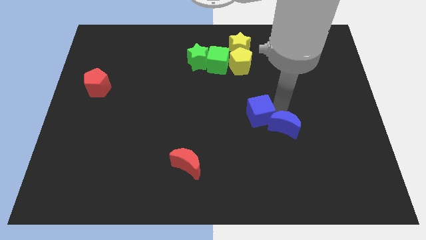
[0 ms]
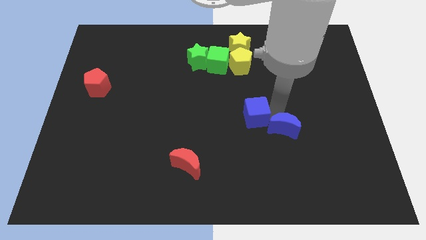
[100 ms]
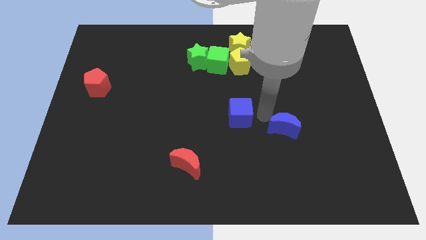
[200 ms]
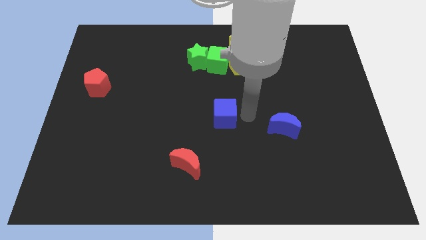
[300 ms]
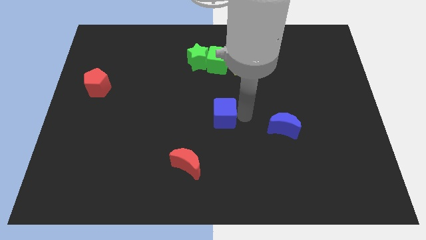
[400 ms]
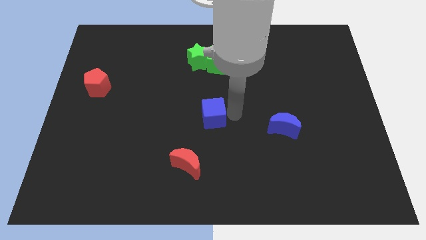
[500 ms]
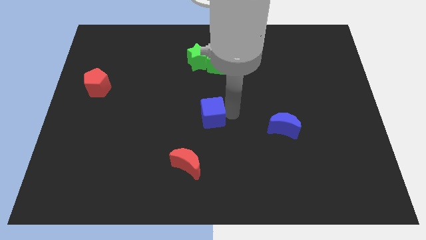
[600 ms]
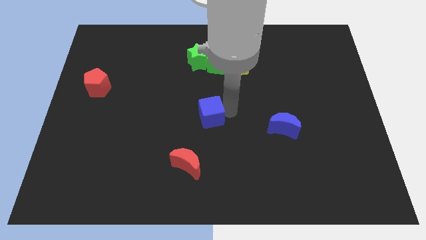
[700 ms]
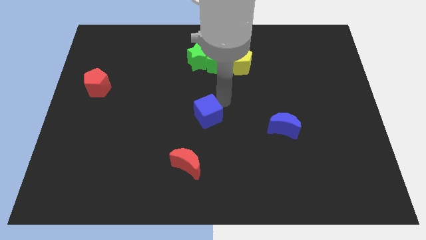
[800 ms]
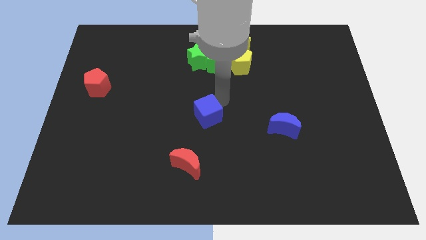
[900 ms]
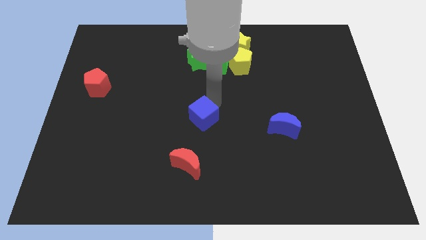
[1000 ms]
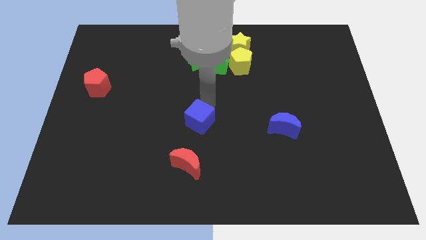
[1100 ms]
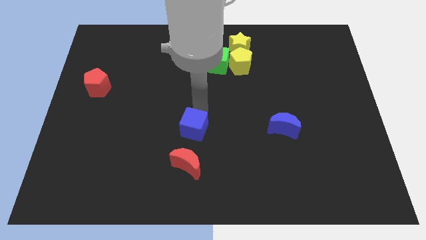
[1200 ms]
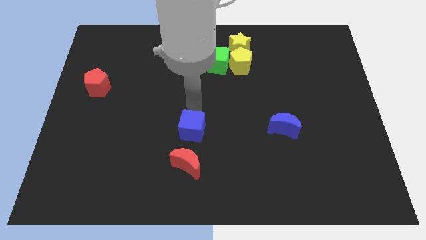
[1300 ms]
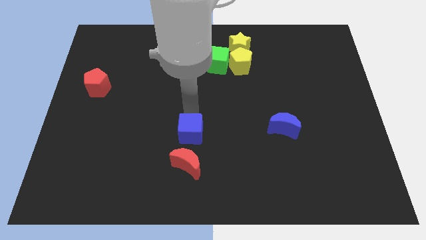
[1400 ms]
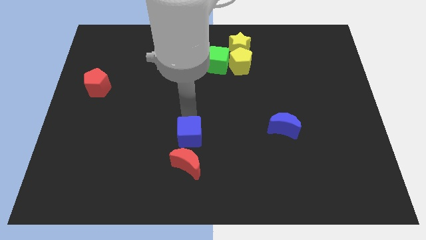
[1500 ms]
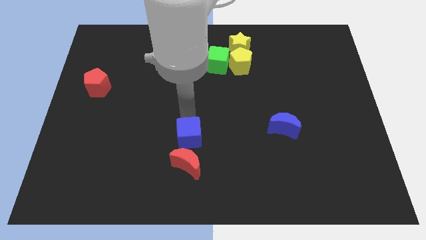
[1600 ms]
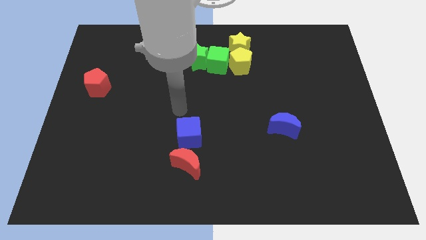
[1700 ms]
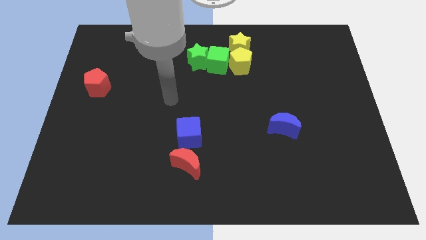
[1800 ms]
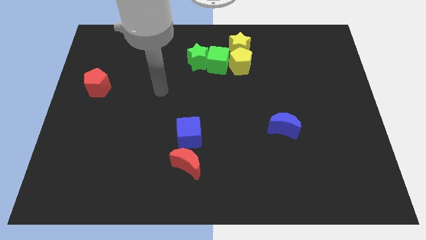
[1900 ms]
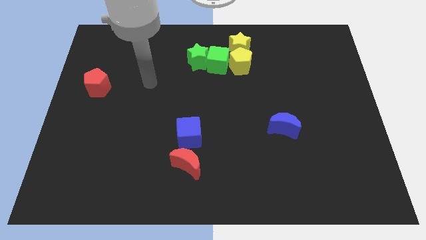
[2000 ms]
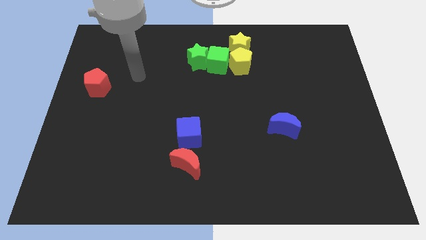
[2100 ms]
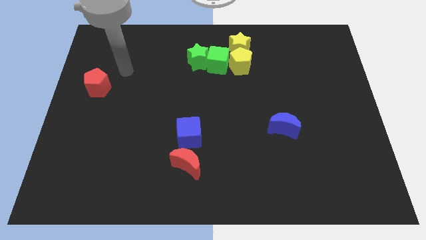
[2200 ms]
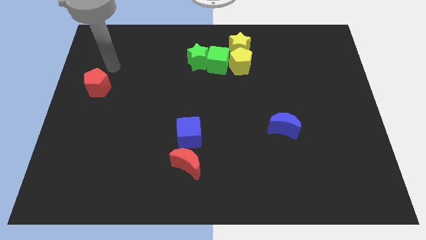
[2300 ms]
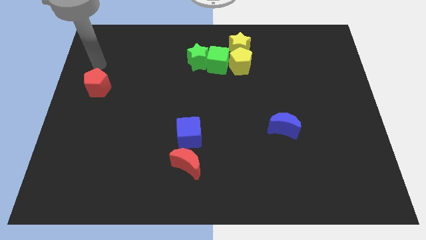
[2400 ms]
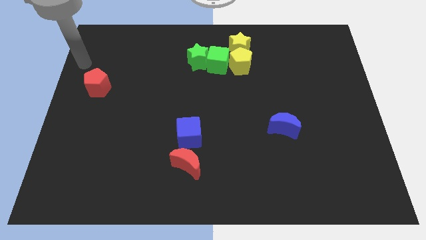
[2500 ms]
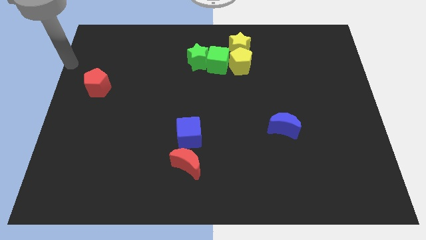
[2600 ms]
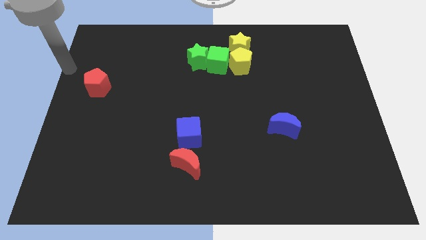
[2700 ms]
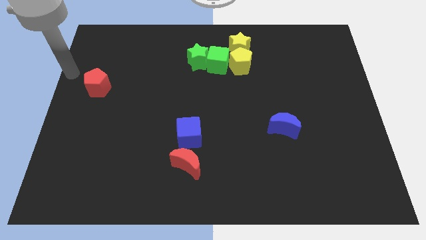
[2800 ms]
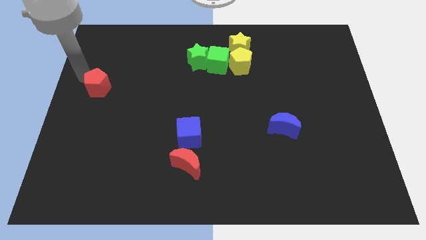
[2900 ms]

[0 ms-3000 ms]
place the blue cube at the top of red moon and move away

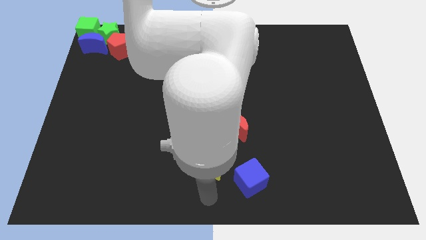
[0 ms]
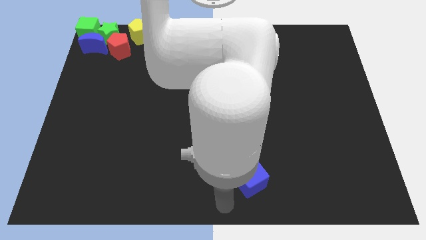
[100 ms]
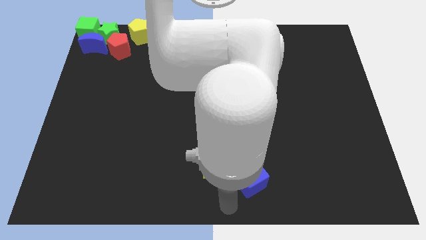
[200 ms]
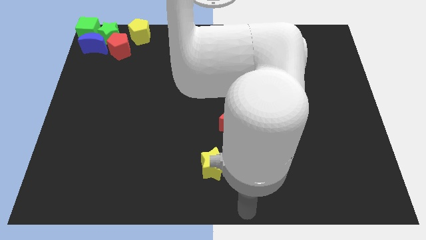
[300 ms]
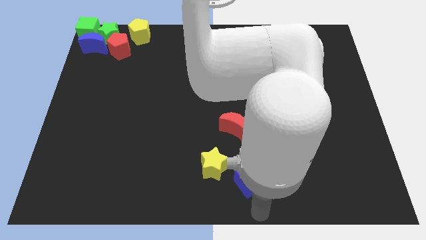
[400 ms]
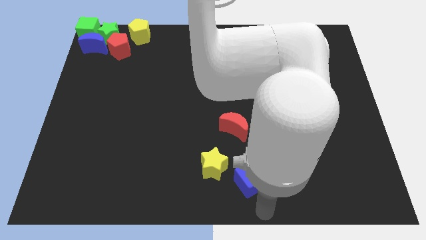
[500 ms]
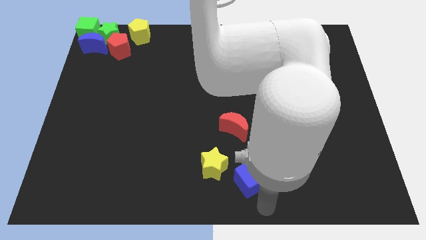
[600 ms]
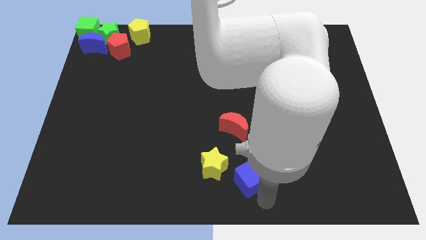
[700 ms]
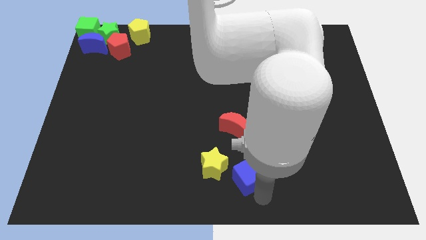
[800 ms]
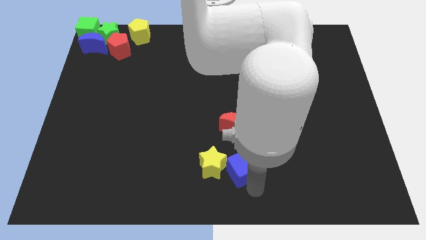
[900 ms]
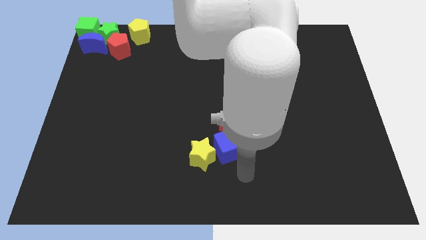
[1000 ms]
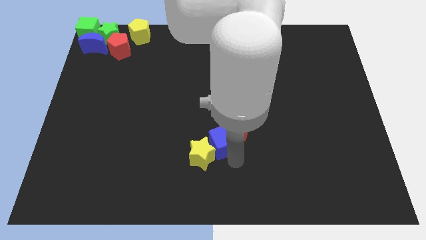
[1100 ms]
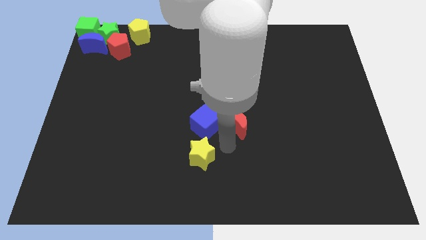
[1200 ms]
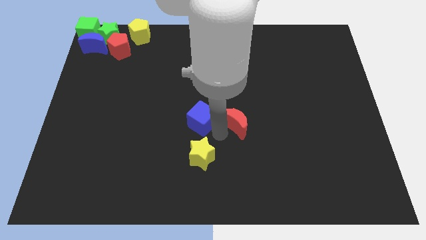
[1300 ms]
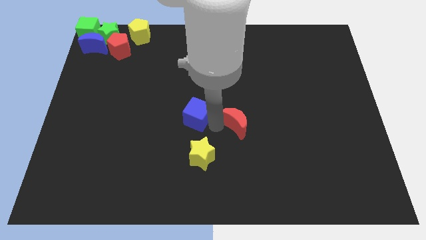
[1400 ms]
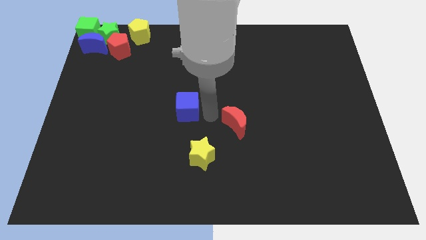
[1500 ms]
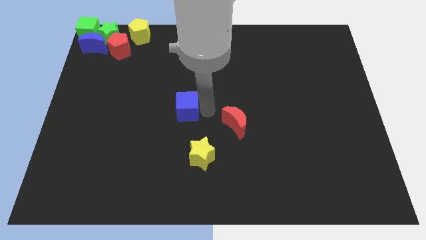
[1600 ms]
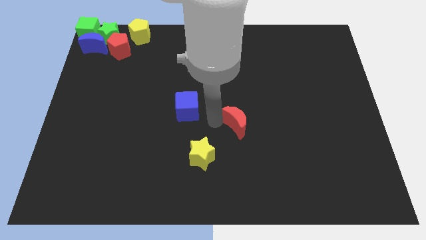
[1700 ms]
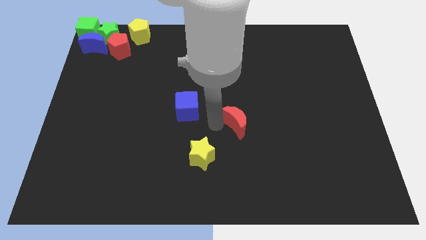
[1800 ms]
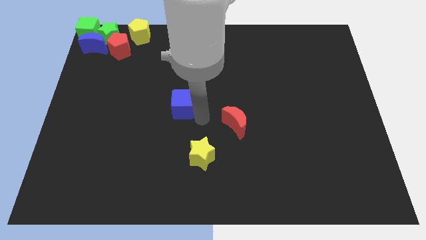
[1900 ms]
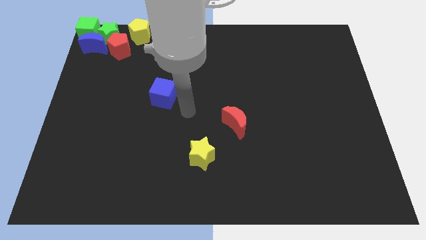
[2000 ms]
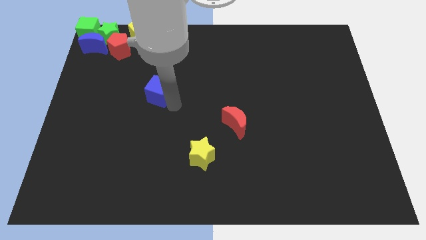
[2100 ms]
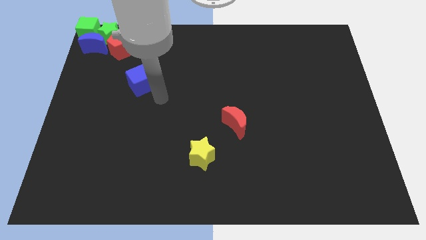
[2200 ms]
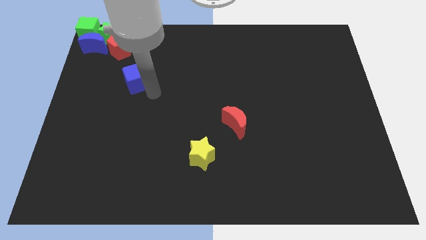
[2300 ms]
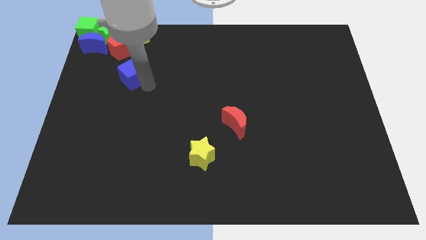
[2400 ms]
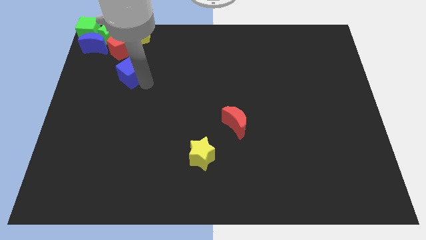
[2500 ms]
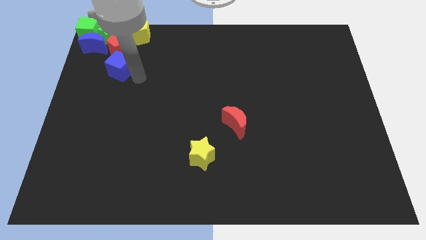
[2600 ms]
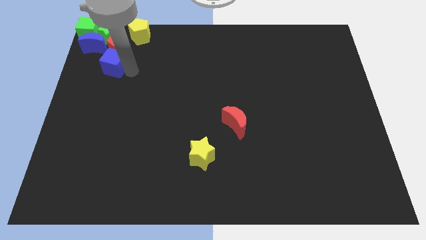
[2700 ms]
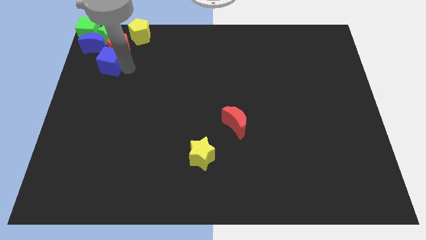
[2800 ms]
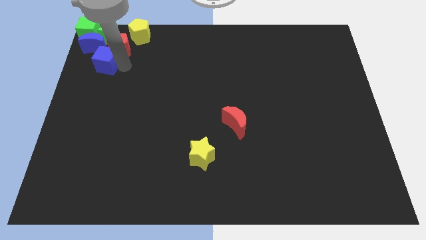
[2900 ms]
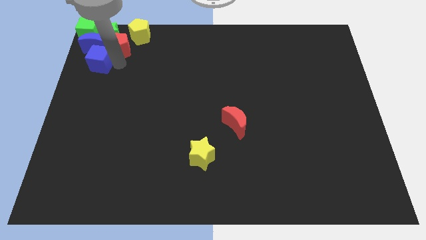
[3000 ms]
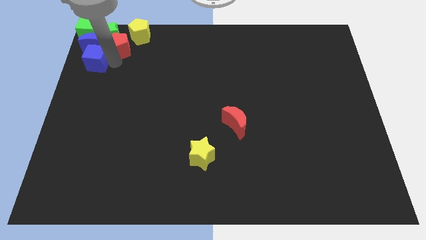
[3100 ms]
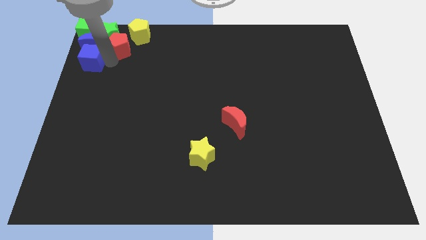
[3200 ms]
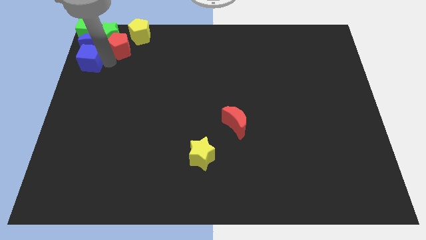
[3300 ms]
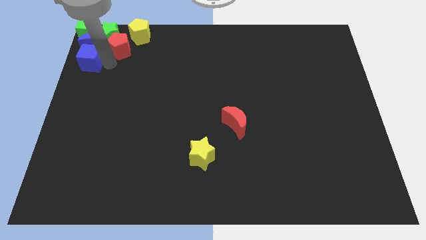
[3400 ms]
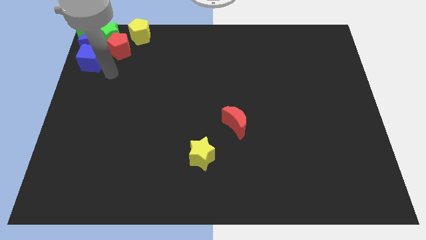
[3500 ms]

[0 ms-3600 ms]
place the blue cube below the blue crescent

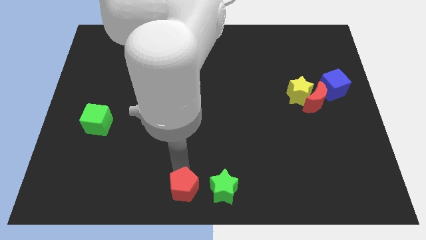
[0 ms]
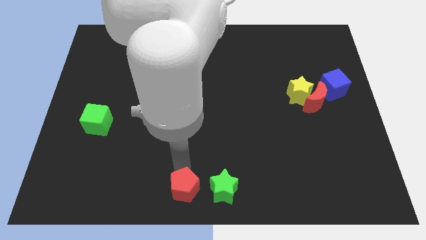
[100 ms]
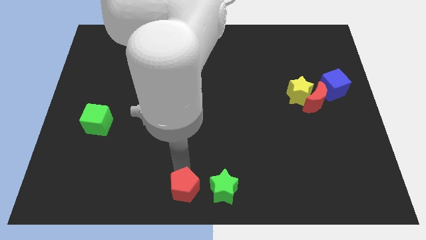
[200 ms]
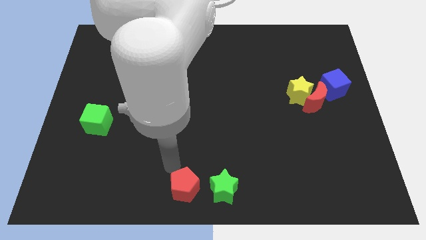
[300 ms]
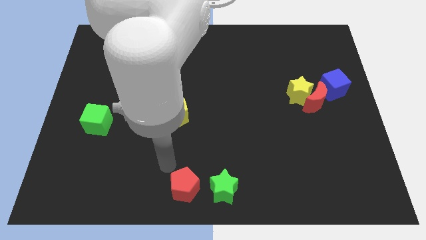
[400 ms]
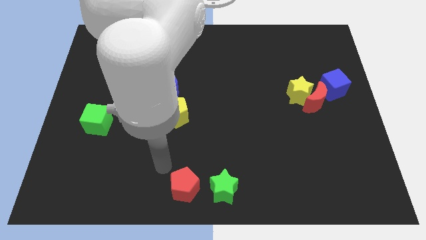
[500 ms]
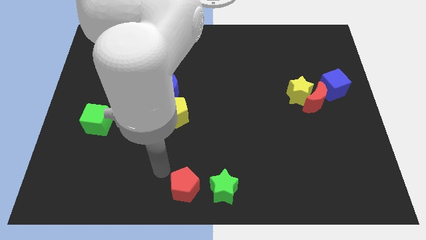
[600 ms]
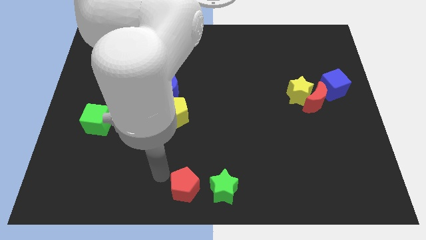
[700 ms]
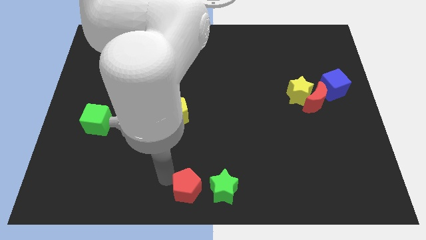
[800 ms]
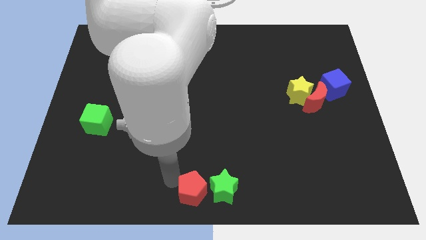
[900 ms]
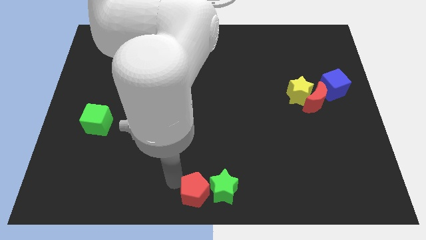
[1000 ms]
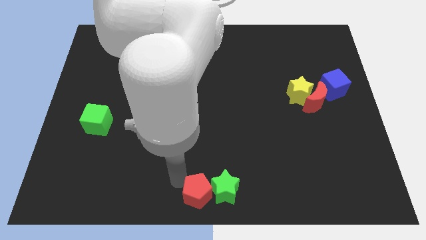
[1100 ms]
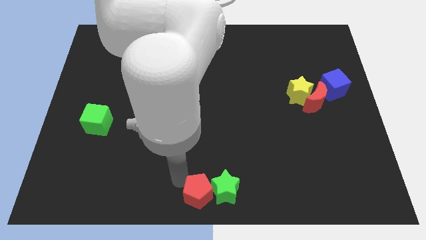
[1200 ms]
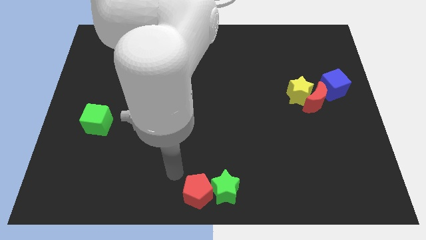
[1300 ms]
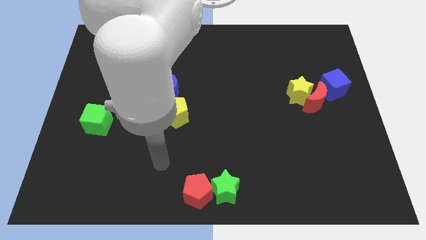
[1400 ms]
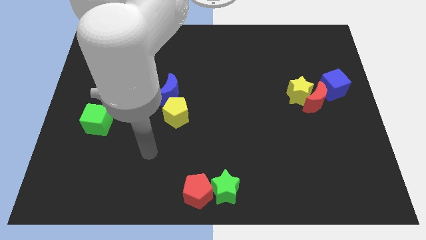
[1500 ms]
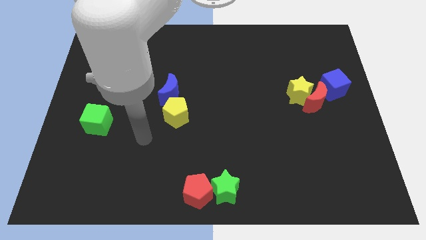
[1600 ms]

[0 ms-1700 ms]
move the red pentagon into the green star

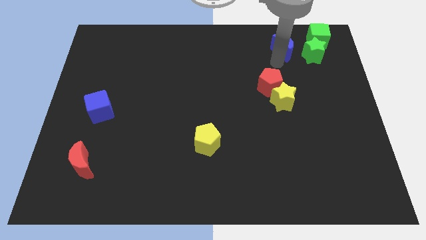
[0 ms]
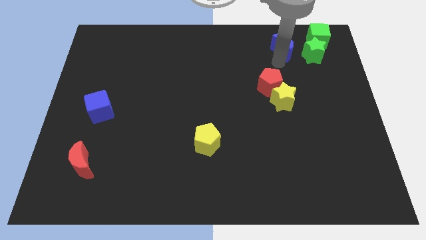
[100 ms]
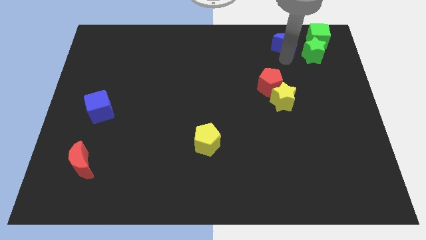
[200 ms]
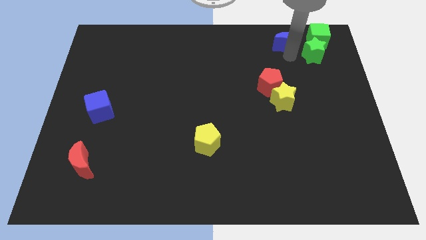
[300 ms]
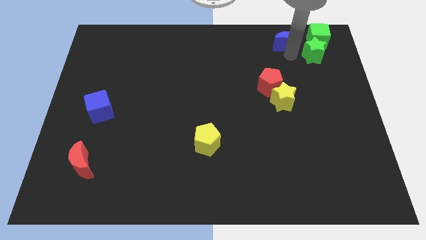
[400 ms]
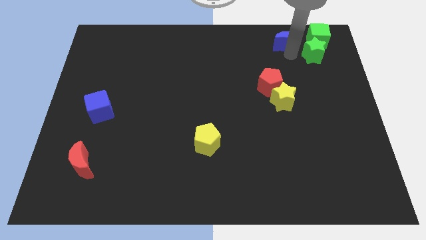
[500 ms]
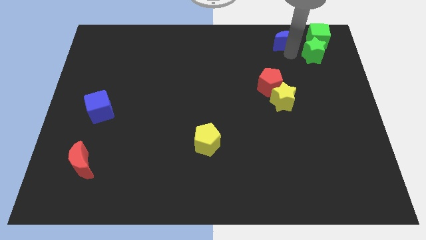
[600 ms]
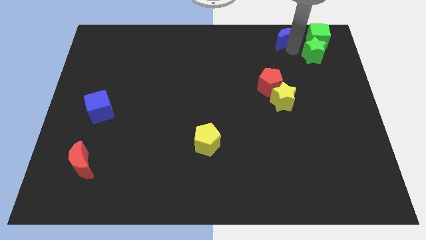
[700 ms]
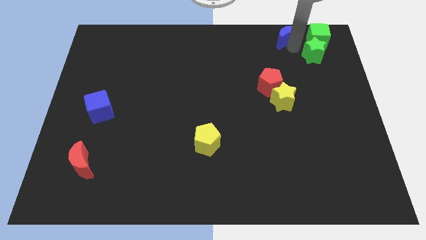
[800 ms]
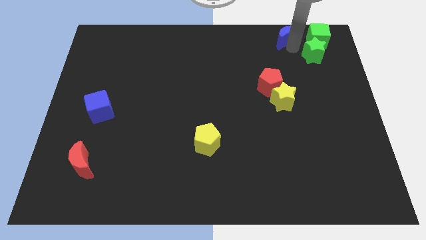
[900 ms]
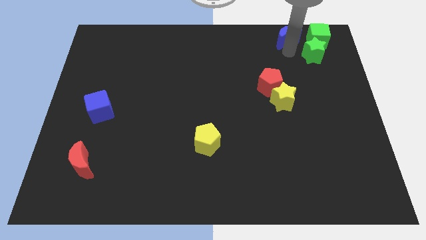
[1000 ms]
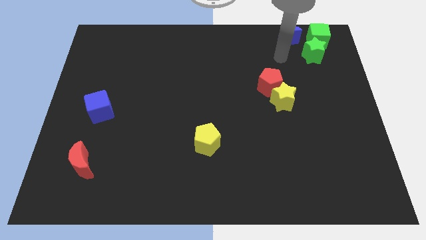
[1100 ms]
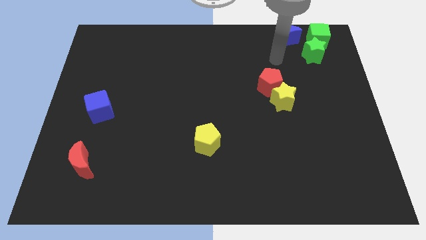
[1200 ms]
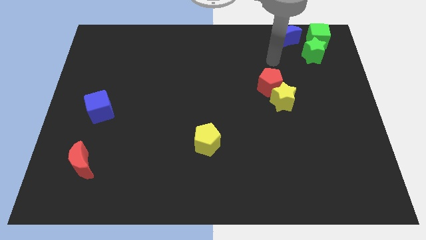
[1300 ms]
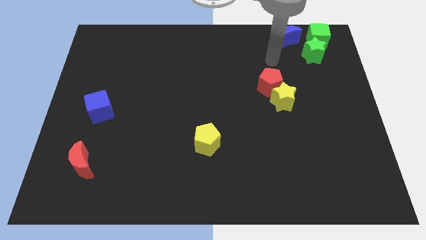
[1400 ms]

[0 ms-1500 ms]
push the blue crescent towards the top right of the board
